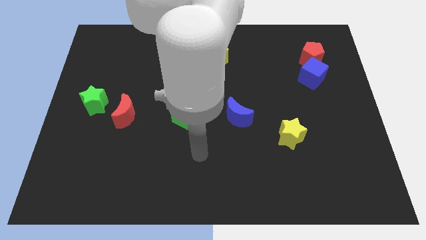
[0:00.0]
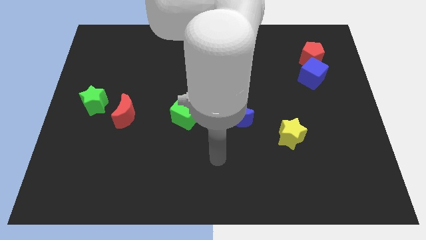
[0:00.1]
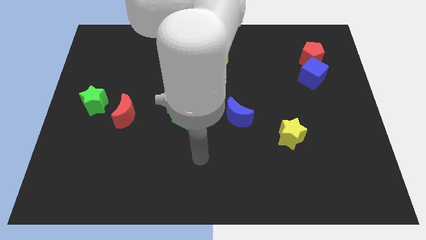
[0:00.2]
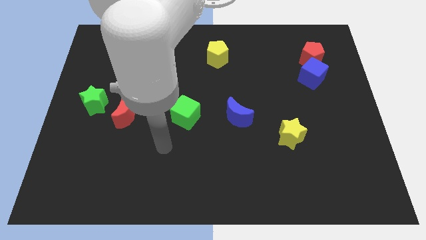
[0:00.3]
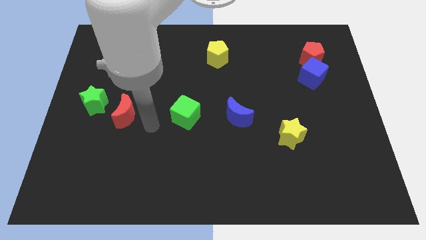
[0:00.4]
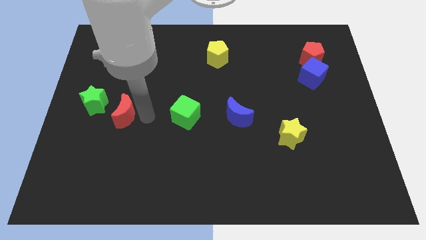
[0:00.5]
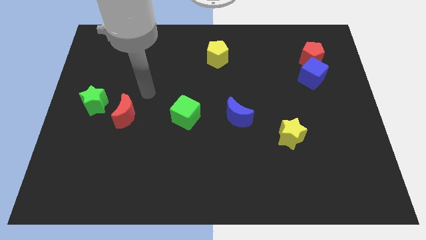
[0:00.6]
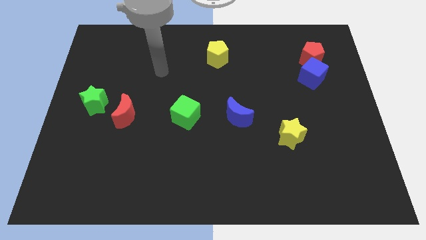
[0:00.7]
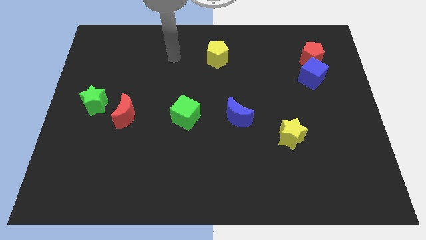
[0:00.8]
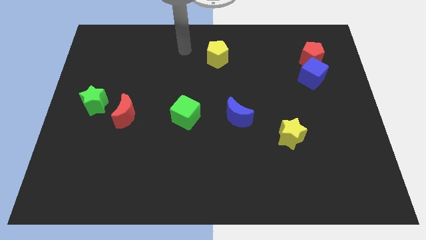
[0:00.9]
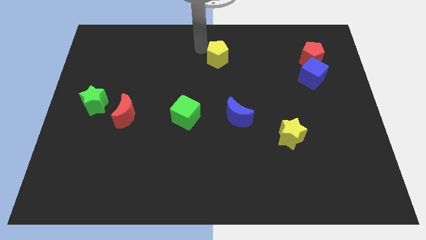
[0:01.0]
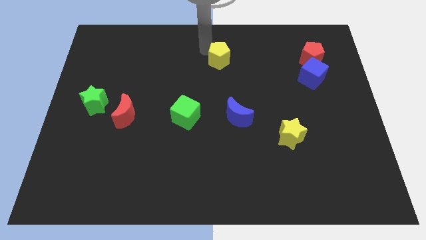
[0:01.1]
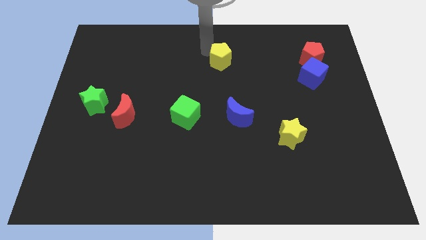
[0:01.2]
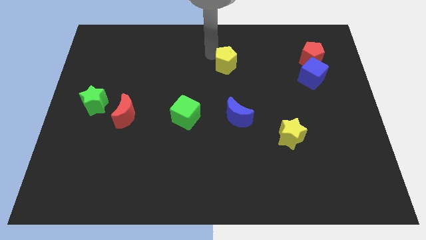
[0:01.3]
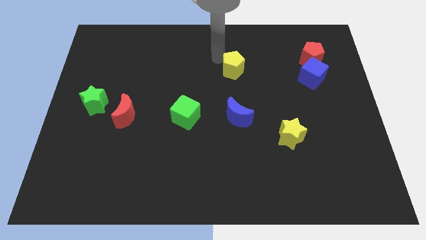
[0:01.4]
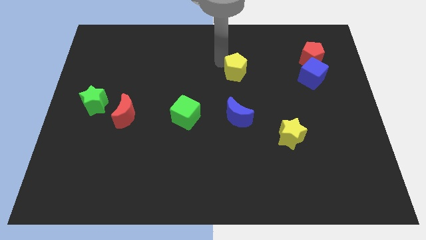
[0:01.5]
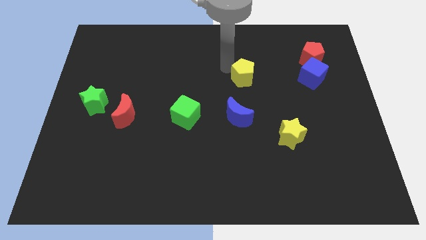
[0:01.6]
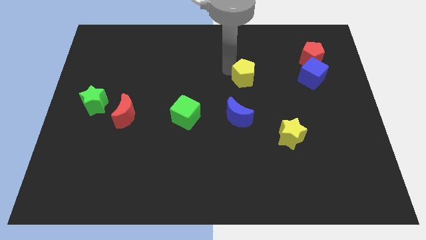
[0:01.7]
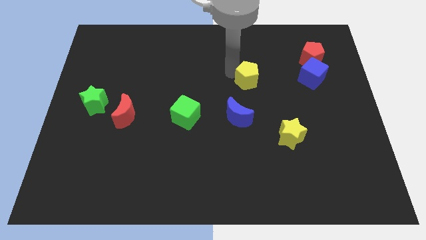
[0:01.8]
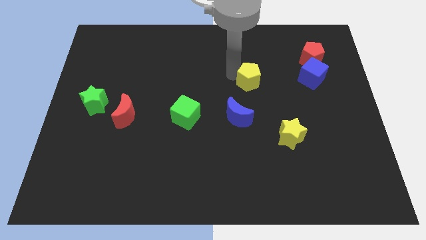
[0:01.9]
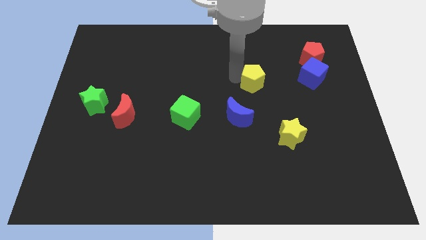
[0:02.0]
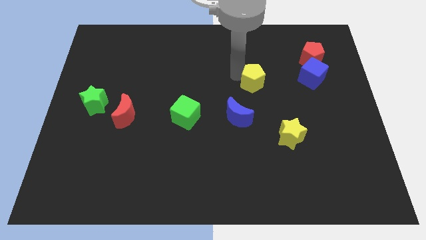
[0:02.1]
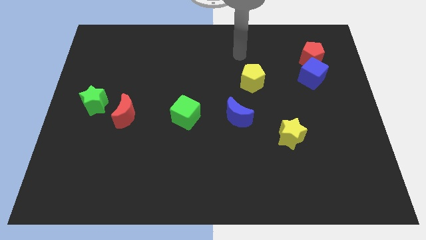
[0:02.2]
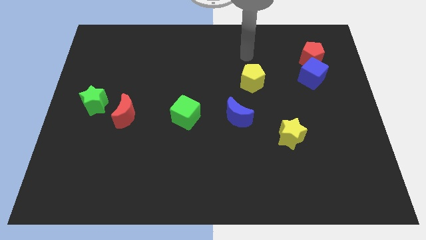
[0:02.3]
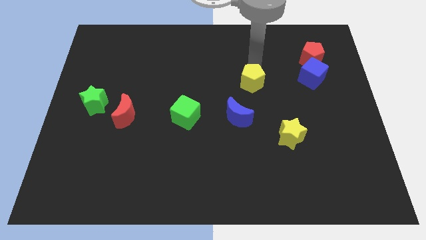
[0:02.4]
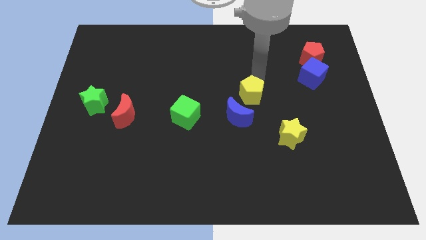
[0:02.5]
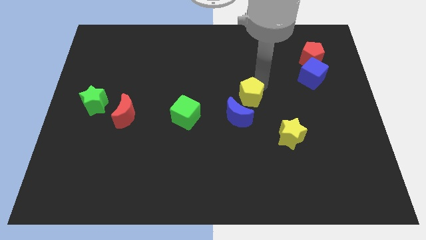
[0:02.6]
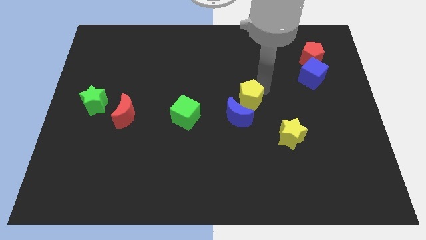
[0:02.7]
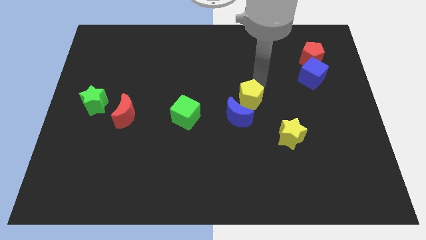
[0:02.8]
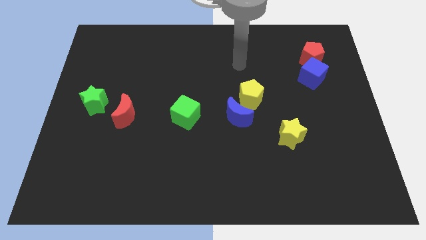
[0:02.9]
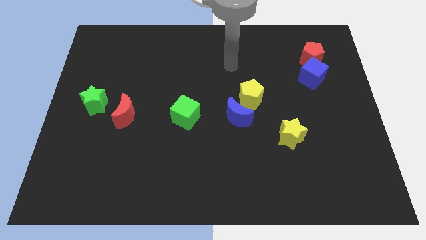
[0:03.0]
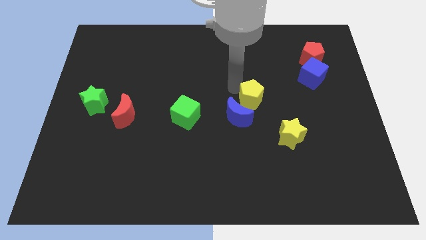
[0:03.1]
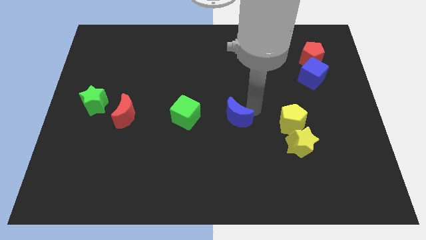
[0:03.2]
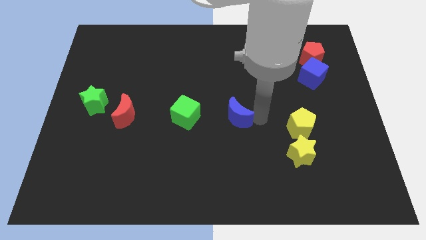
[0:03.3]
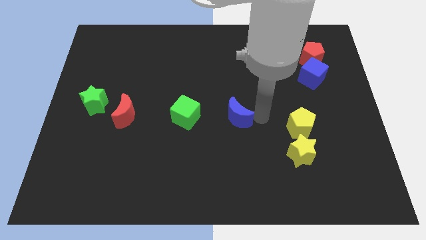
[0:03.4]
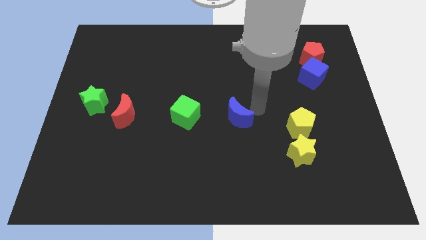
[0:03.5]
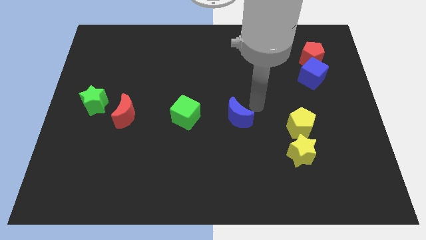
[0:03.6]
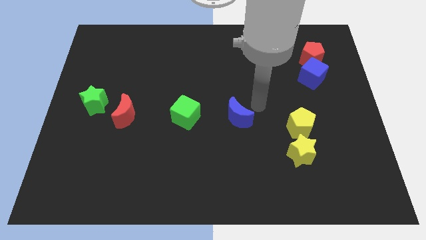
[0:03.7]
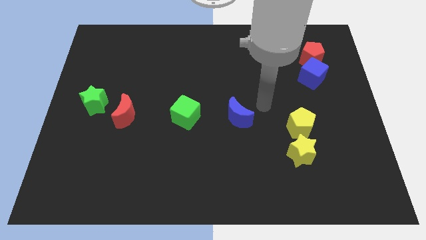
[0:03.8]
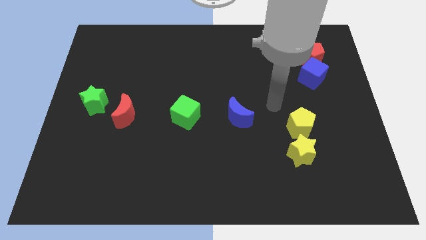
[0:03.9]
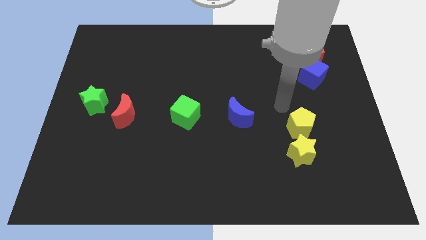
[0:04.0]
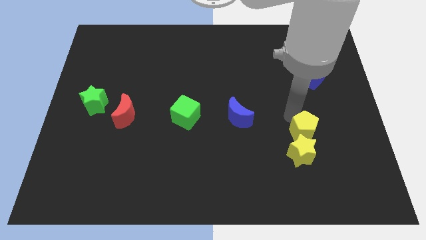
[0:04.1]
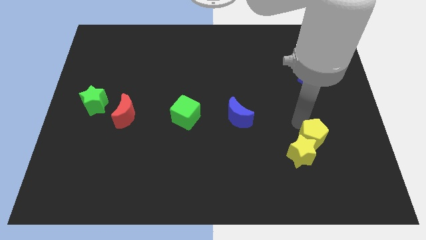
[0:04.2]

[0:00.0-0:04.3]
put the yellow pentagon to the yellow star

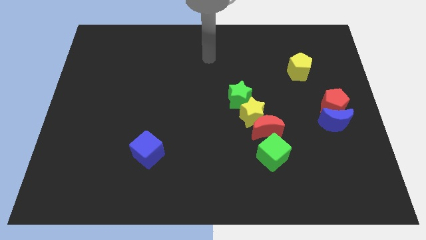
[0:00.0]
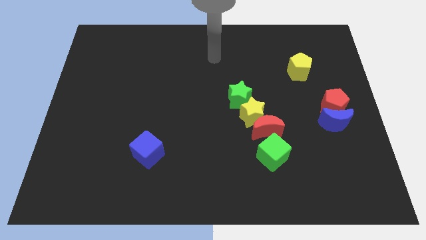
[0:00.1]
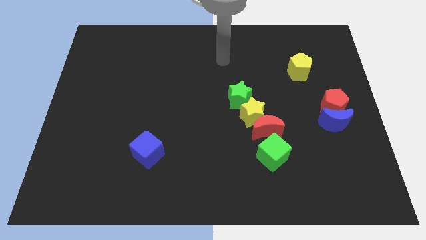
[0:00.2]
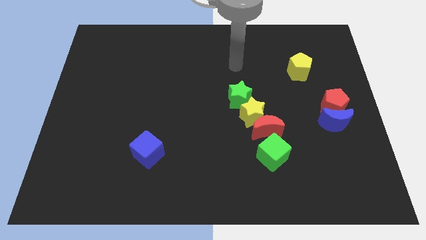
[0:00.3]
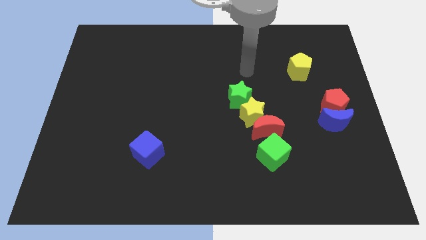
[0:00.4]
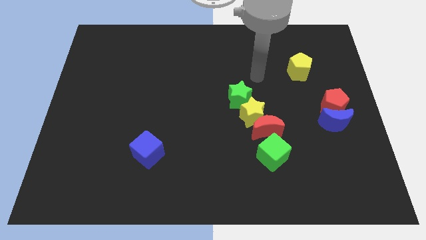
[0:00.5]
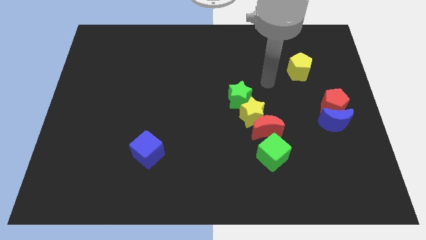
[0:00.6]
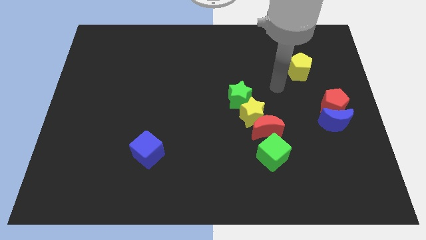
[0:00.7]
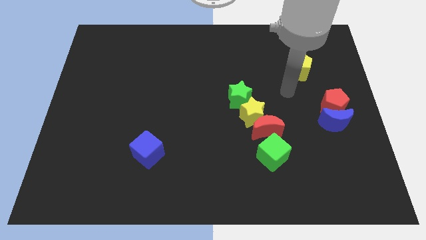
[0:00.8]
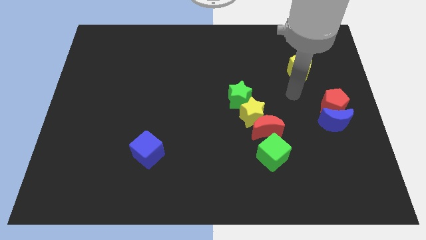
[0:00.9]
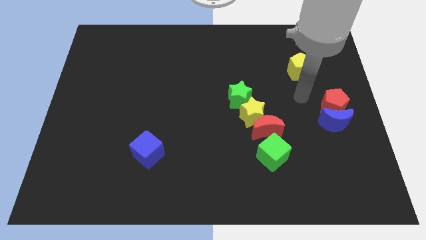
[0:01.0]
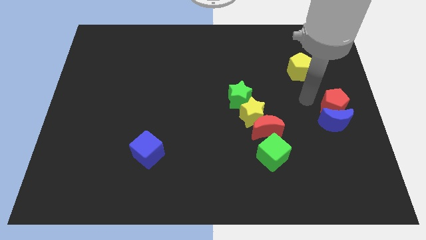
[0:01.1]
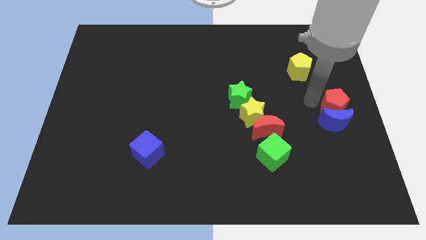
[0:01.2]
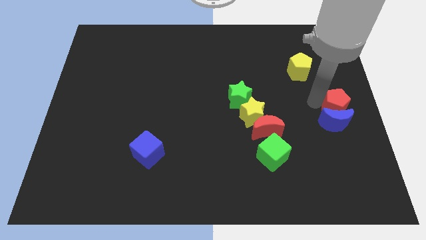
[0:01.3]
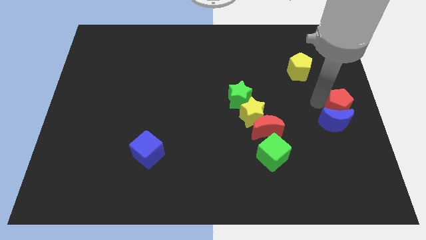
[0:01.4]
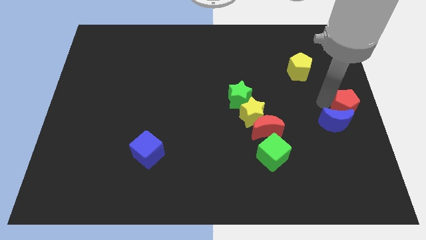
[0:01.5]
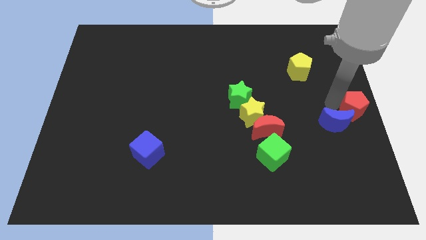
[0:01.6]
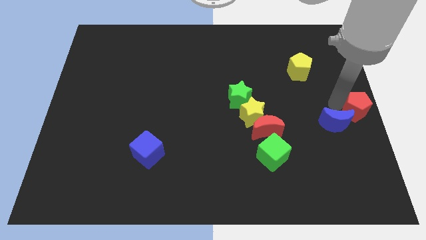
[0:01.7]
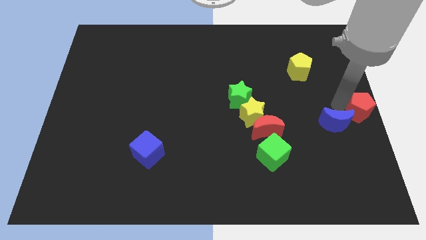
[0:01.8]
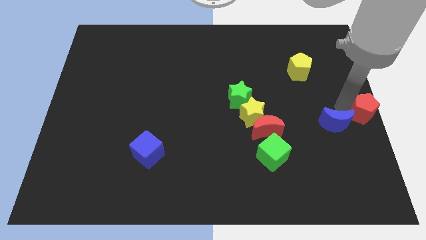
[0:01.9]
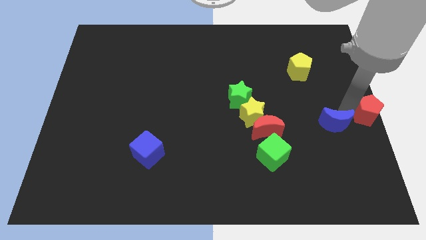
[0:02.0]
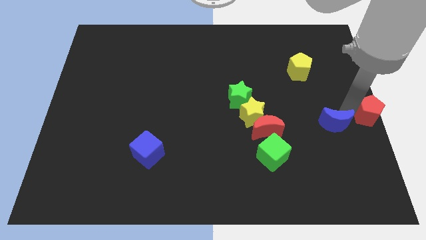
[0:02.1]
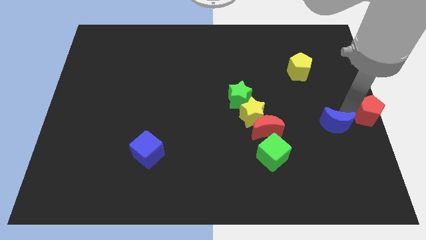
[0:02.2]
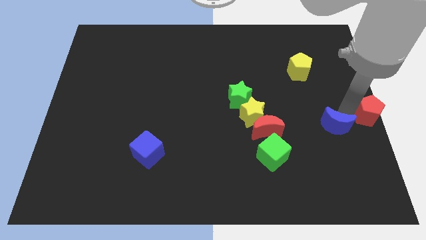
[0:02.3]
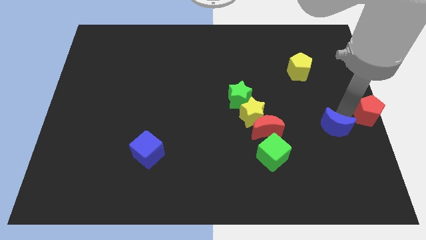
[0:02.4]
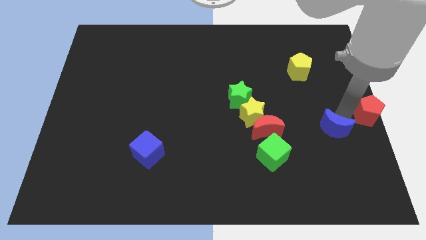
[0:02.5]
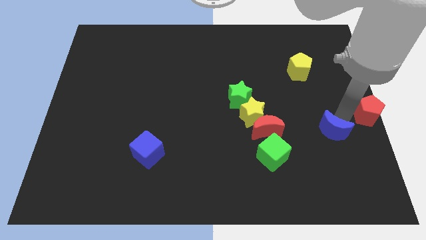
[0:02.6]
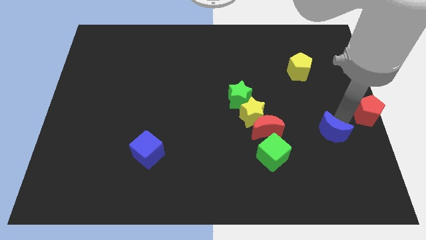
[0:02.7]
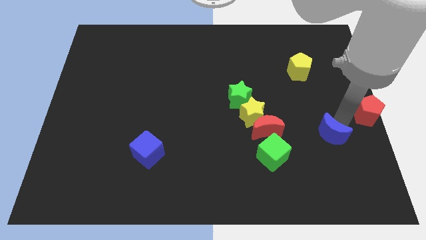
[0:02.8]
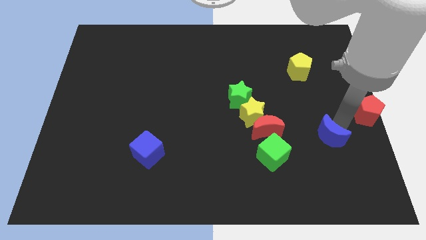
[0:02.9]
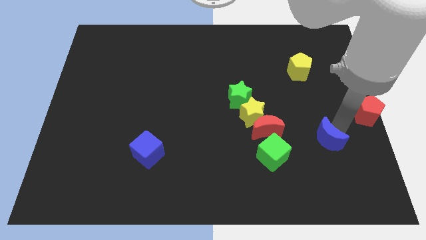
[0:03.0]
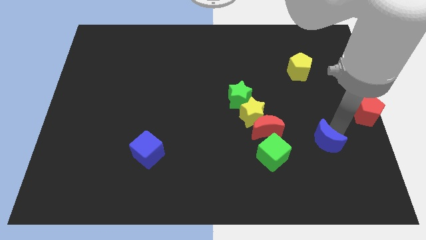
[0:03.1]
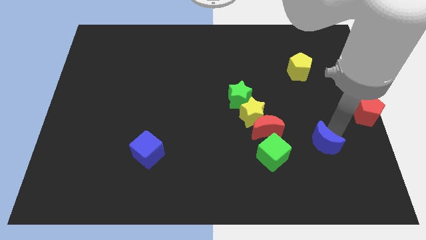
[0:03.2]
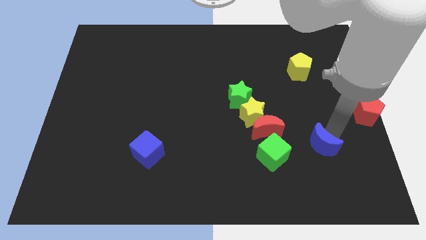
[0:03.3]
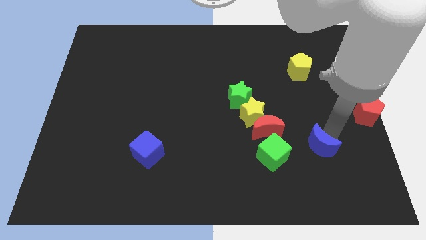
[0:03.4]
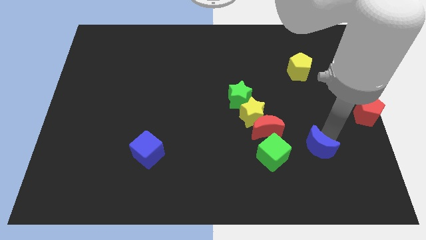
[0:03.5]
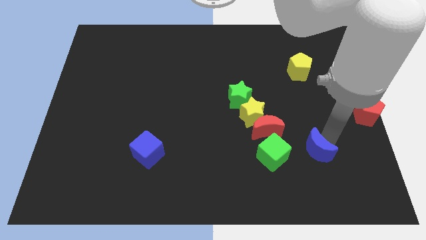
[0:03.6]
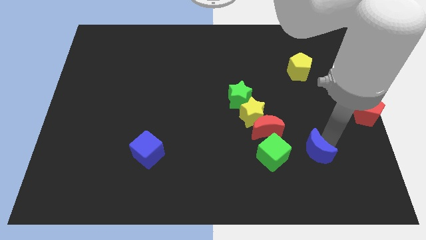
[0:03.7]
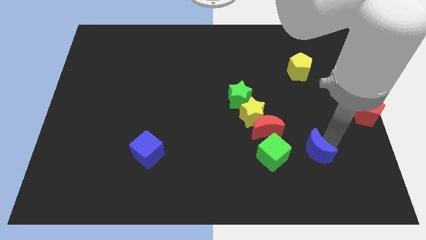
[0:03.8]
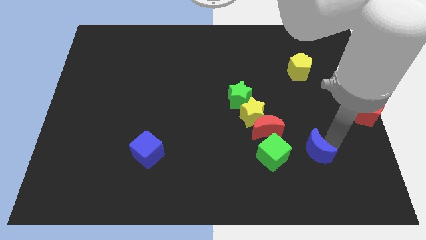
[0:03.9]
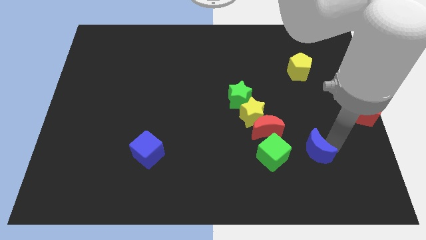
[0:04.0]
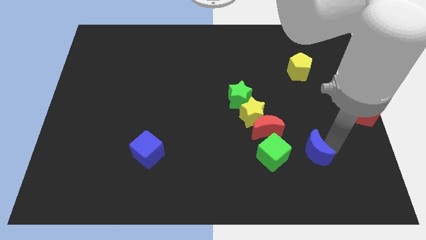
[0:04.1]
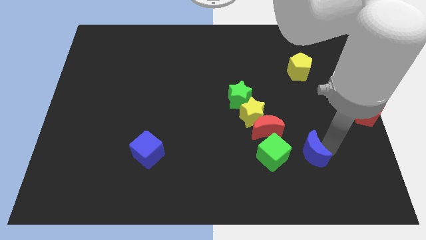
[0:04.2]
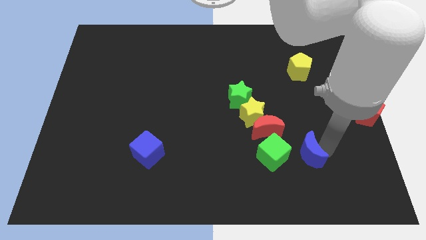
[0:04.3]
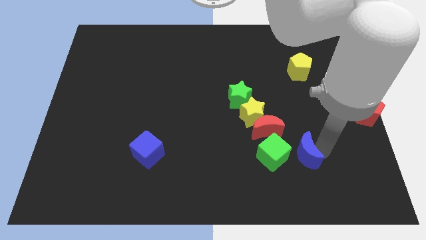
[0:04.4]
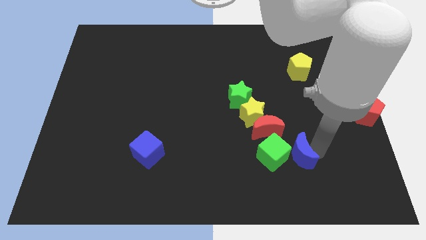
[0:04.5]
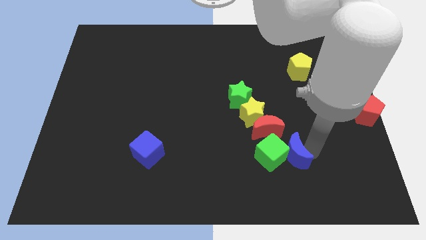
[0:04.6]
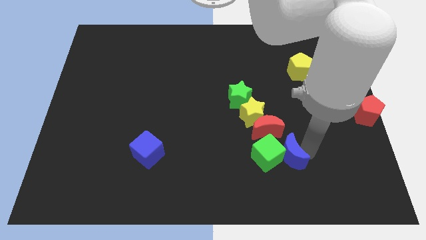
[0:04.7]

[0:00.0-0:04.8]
put the blue moon to the green cube
